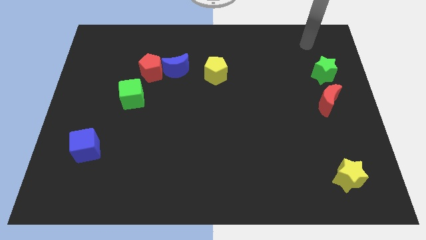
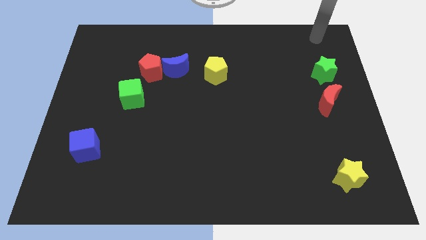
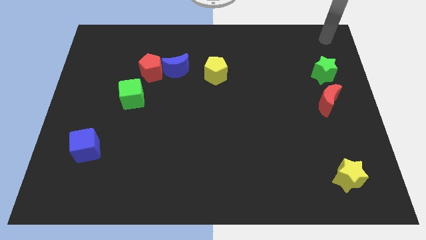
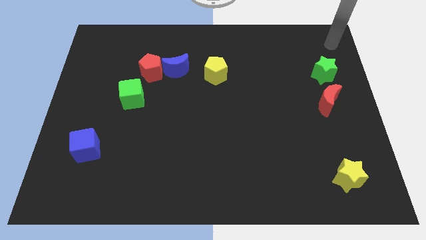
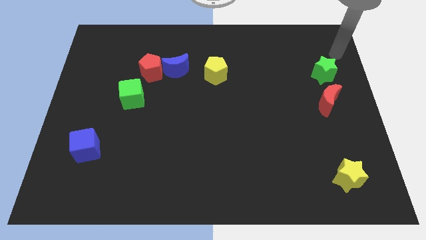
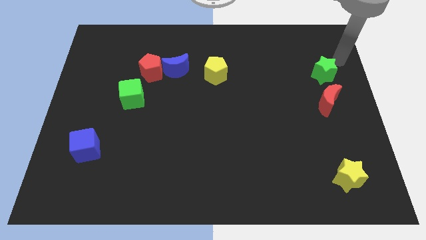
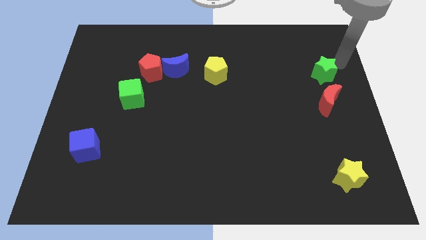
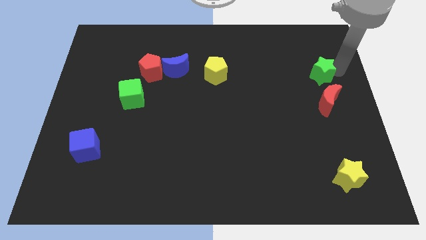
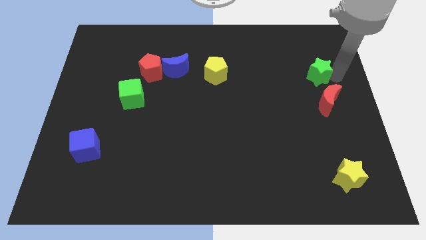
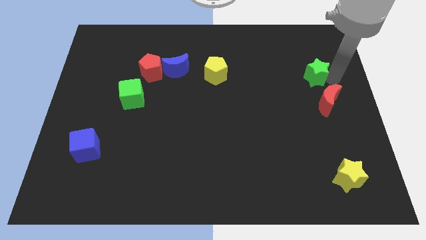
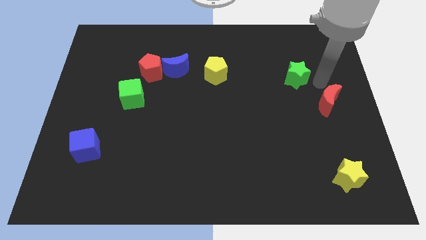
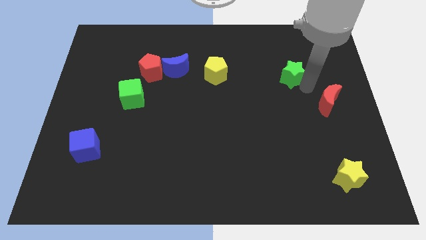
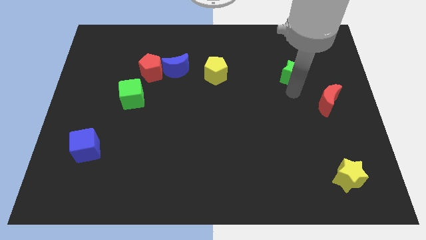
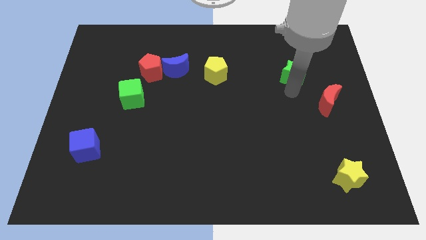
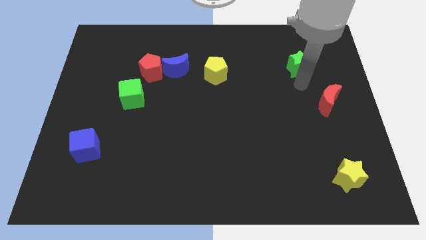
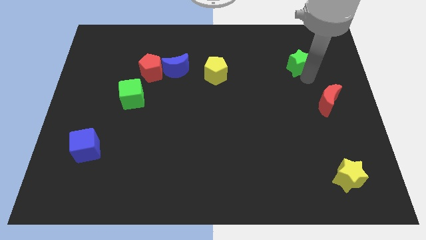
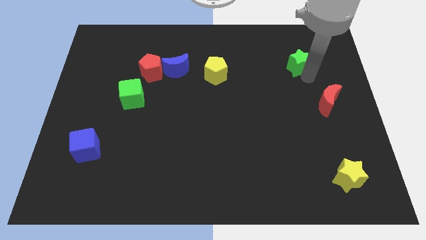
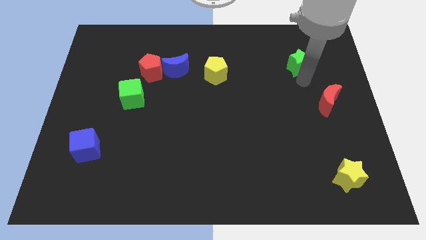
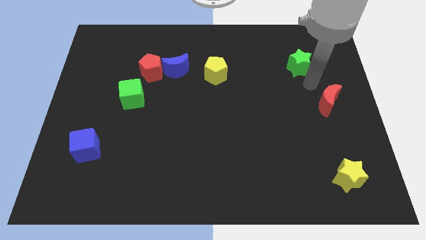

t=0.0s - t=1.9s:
drag the green star diagonally on the top left side of the red crescent

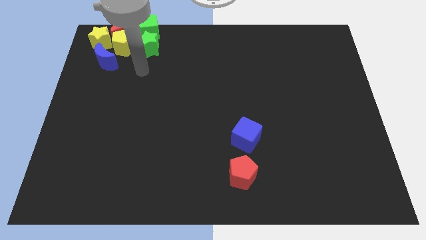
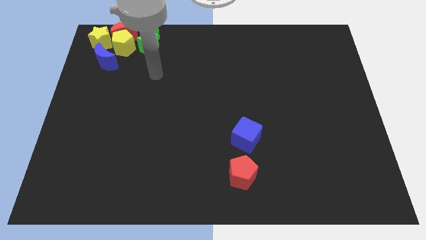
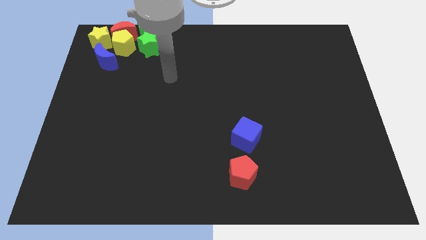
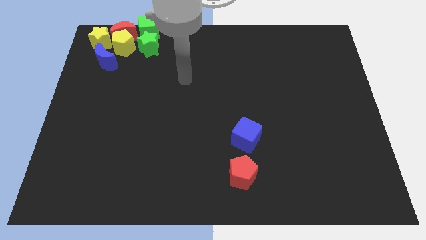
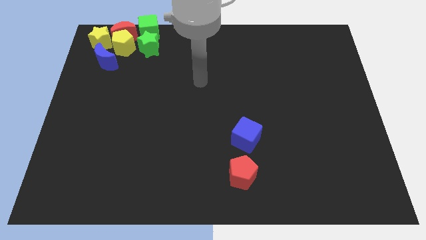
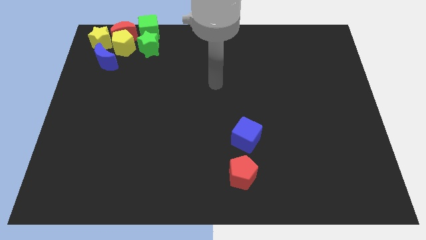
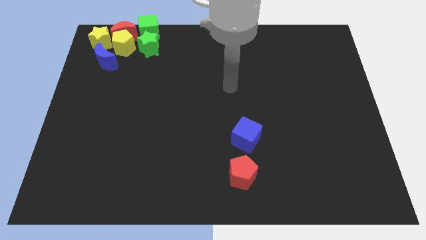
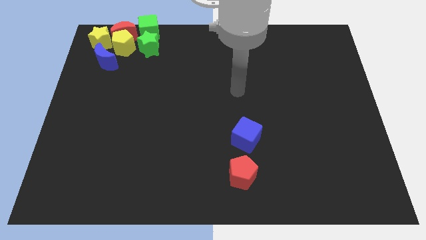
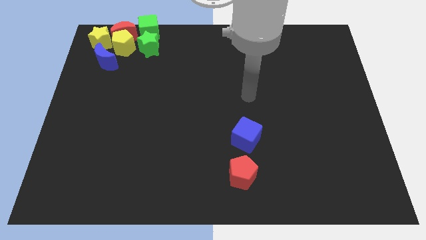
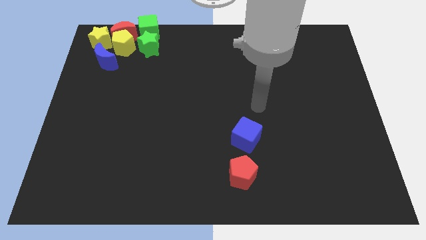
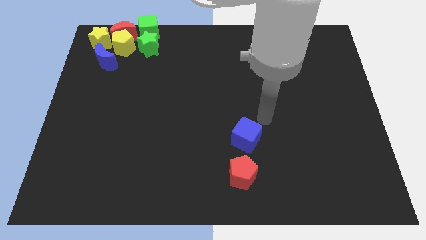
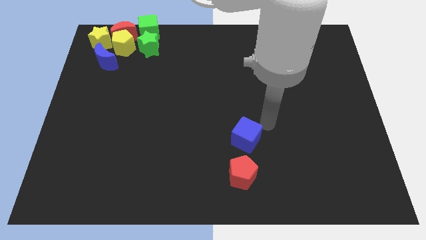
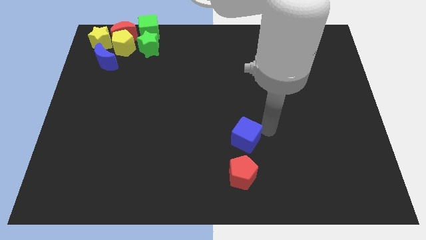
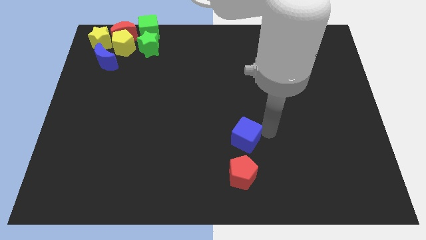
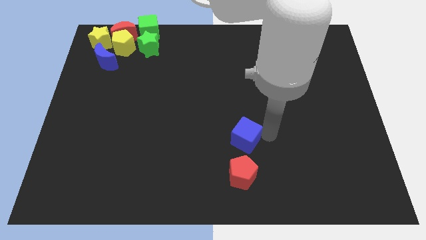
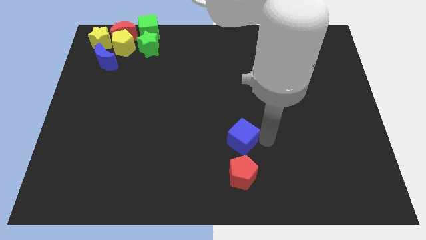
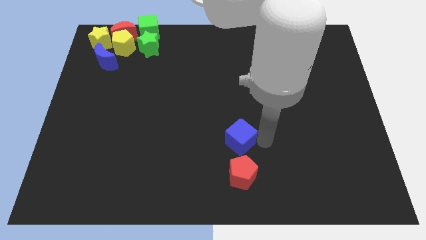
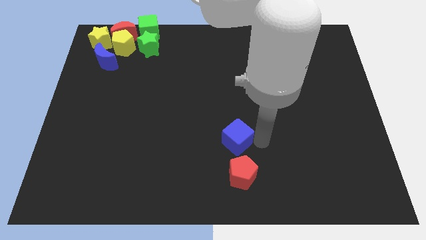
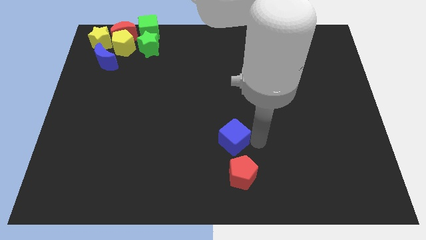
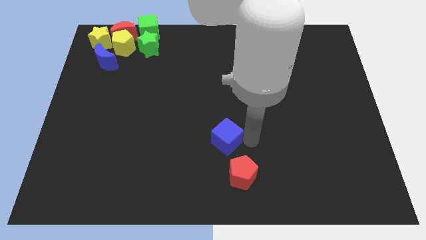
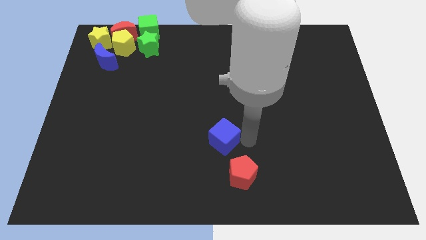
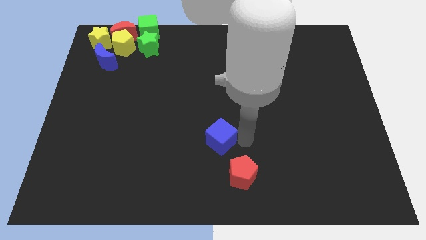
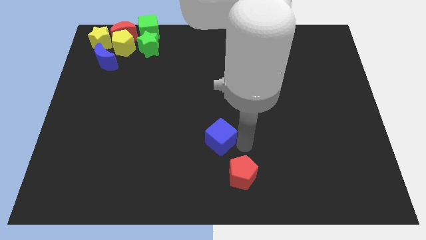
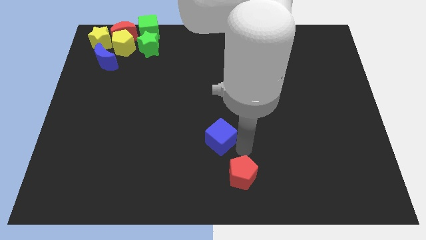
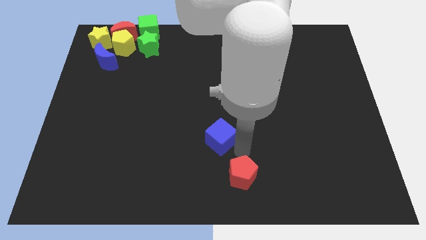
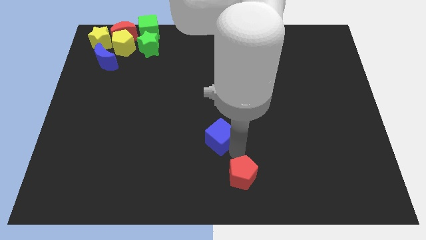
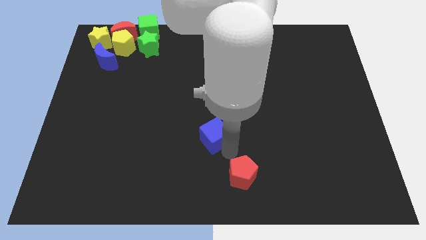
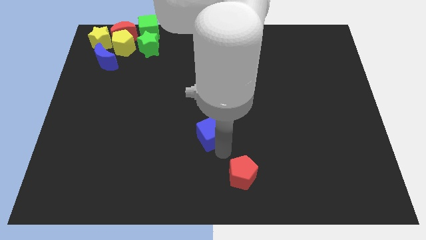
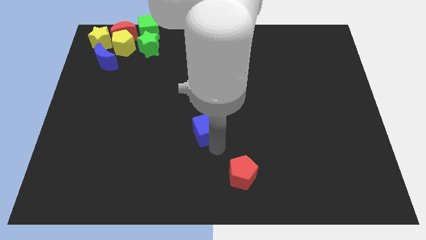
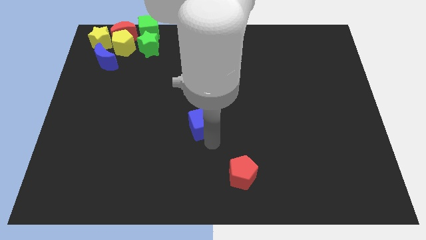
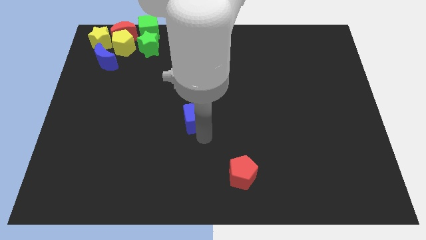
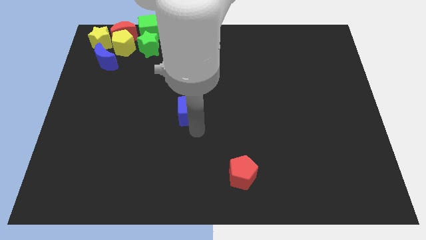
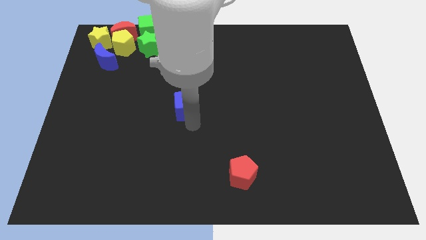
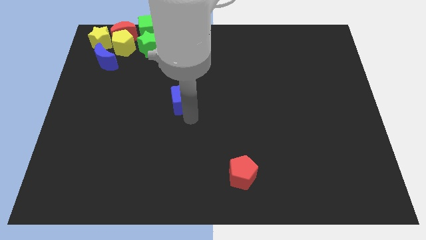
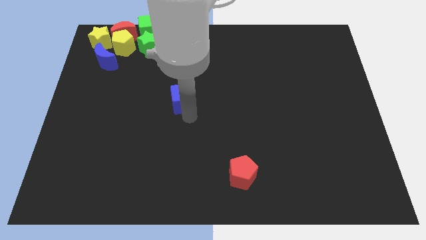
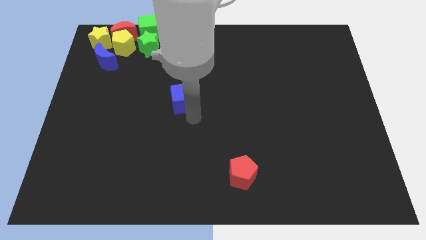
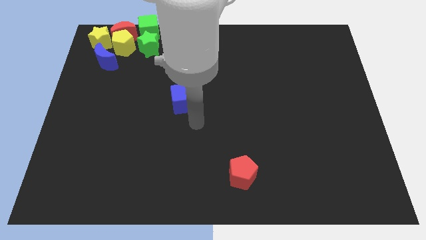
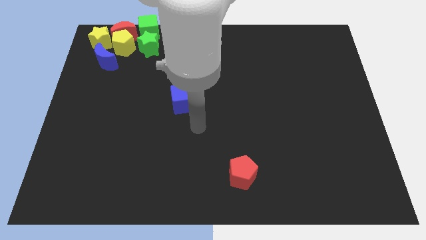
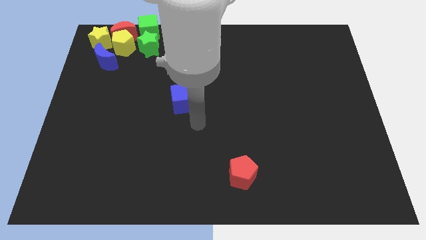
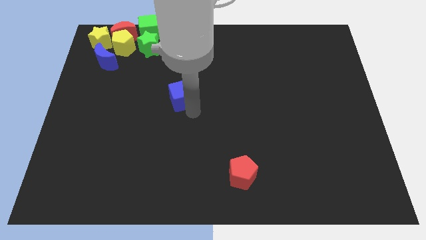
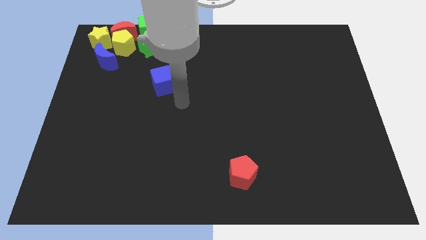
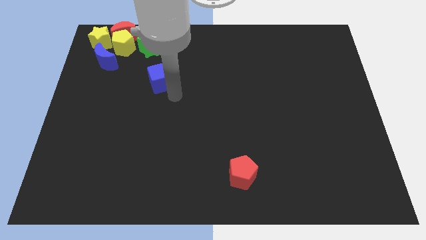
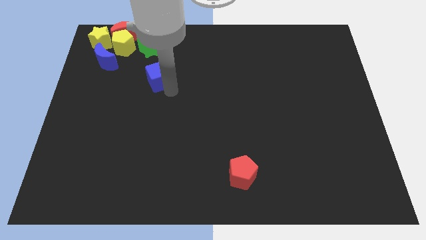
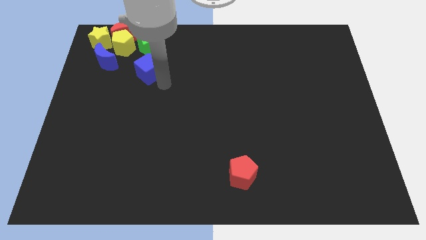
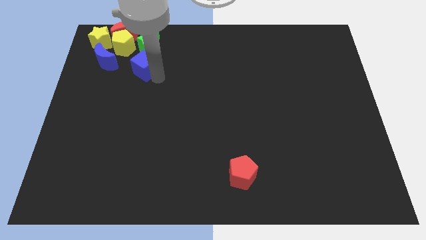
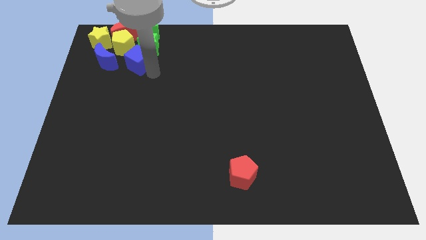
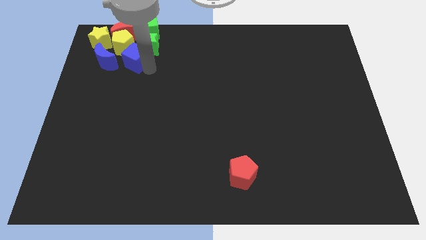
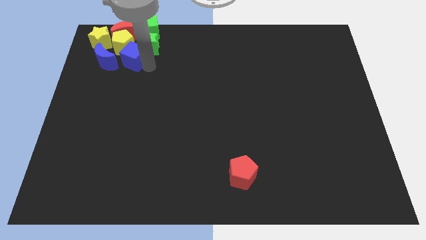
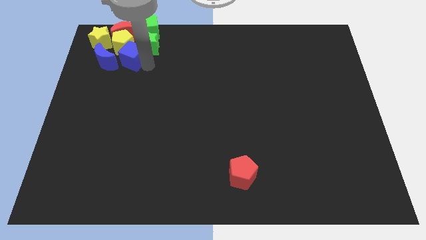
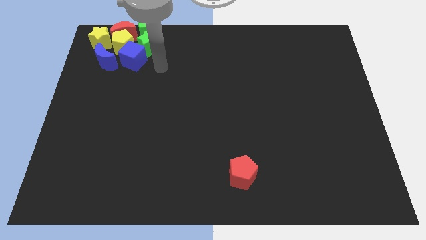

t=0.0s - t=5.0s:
drag the blue cube into the group of blocks

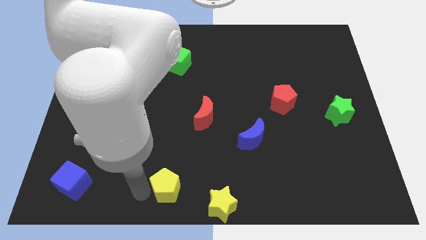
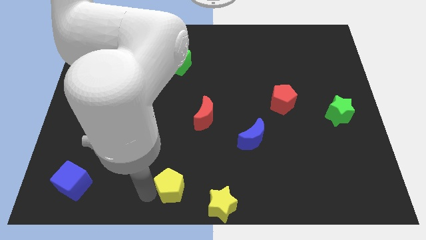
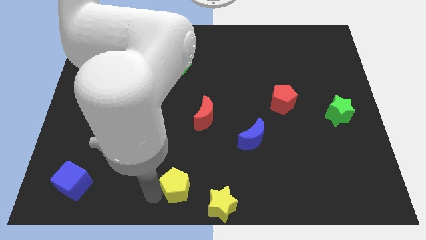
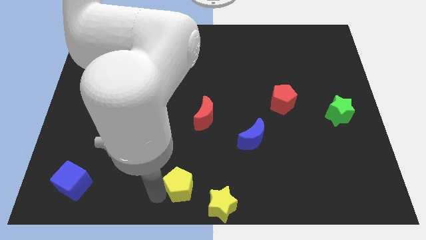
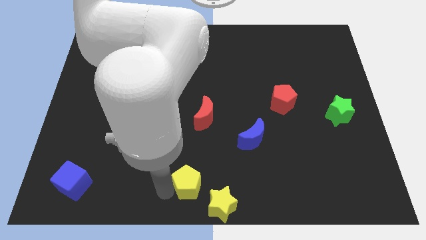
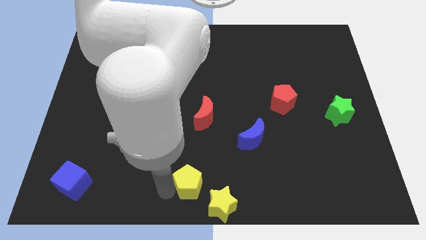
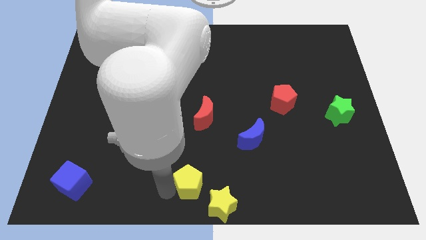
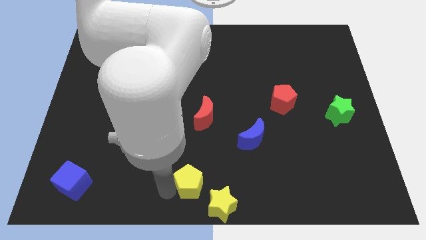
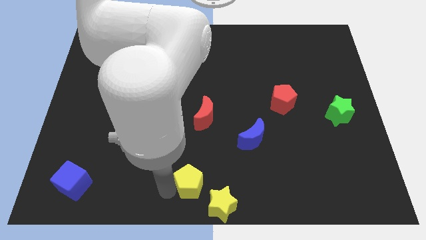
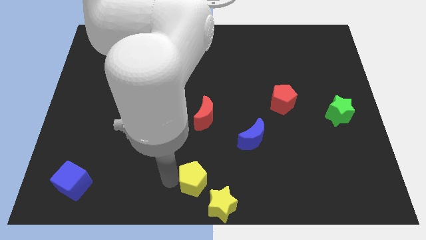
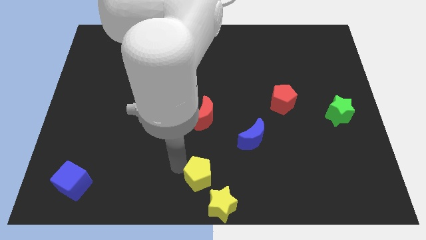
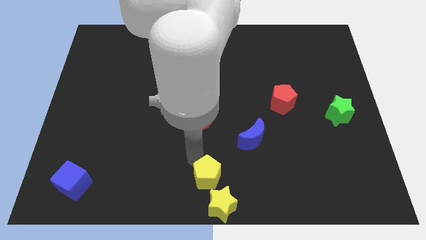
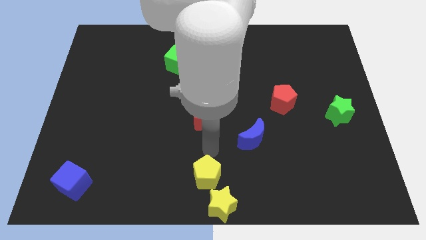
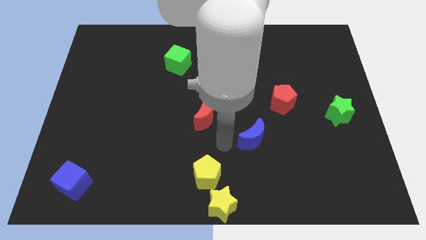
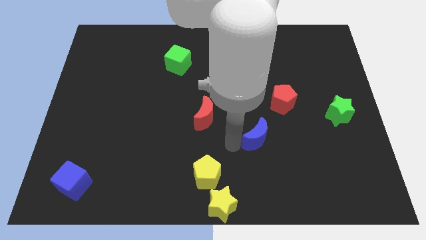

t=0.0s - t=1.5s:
move the yellow pentagon to the top left side of the yellow star

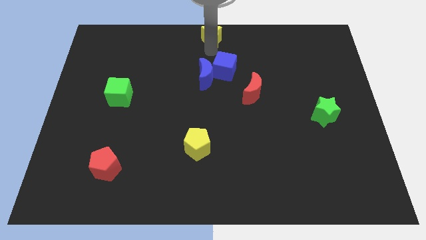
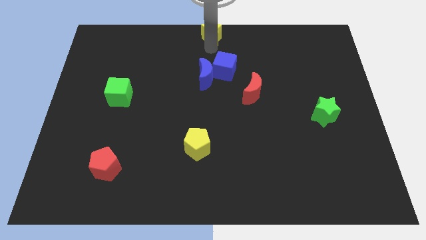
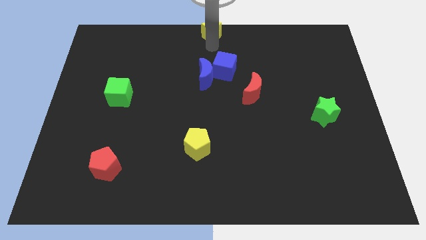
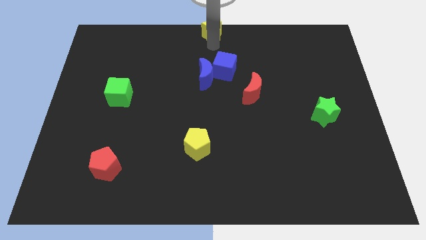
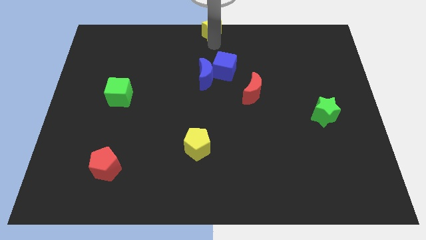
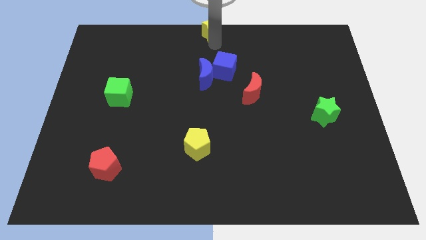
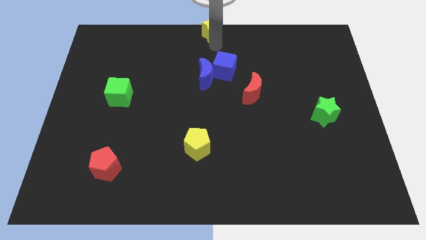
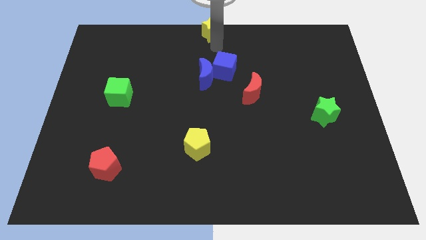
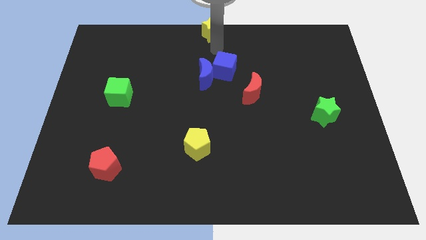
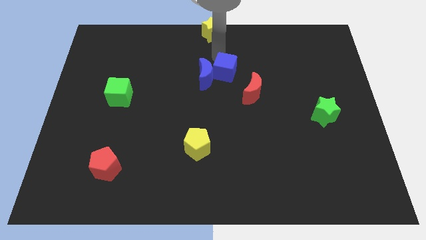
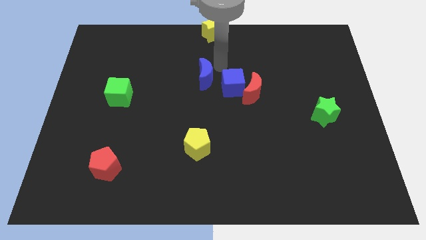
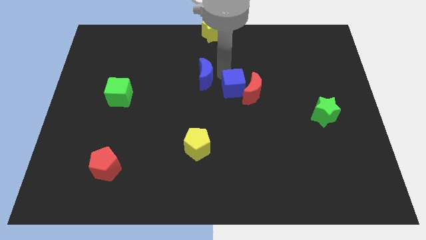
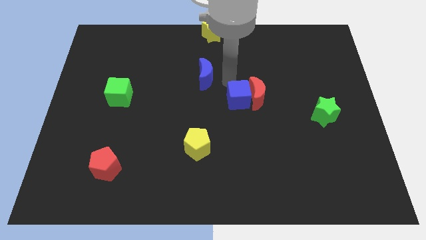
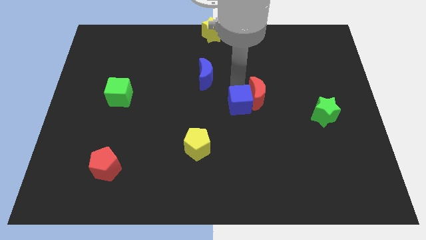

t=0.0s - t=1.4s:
push the blue cube into the red crescent
